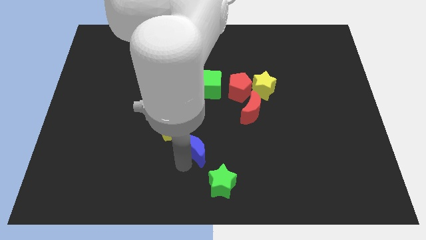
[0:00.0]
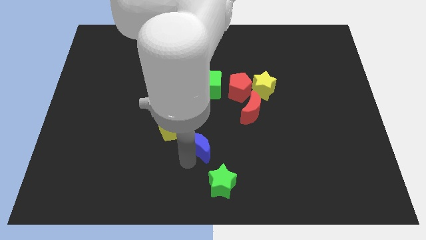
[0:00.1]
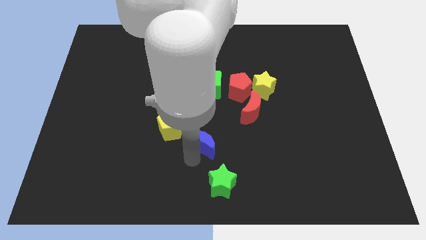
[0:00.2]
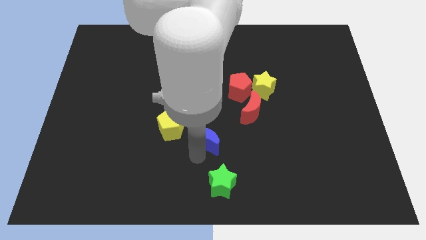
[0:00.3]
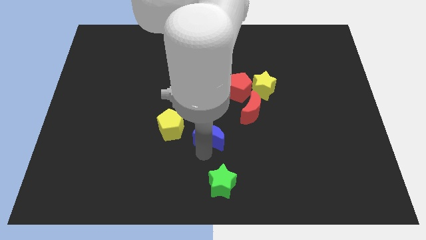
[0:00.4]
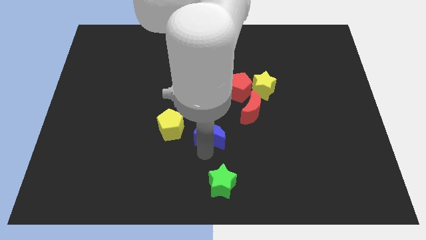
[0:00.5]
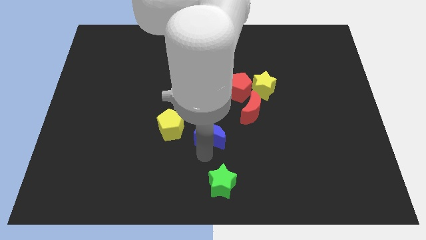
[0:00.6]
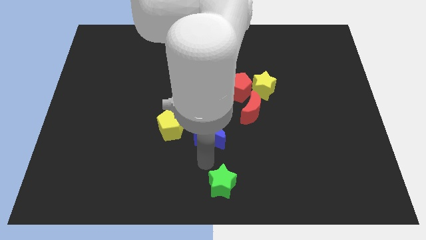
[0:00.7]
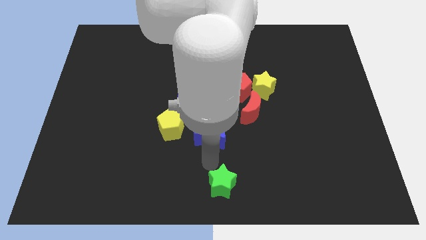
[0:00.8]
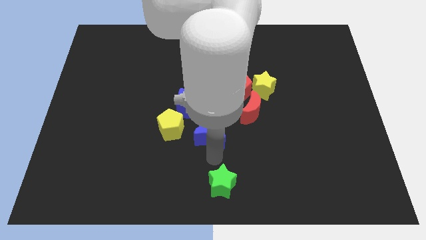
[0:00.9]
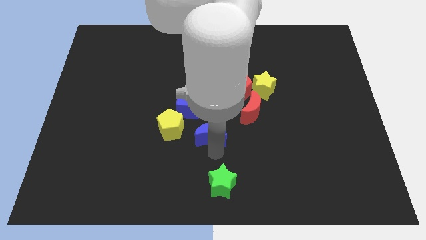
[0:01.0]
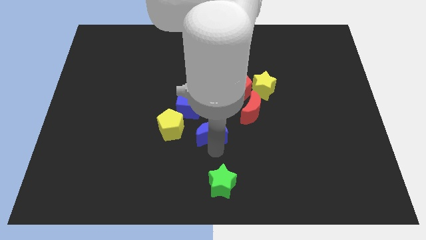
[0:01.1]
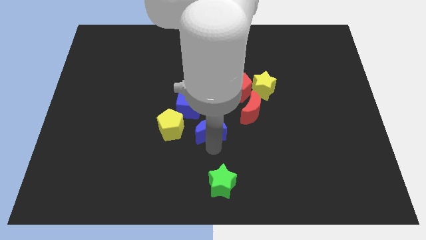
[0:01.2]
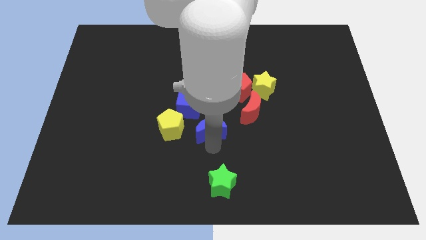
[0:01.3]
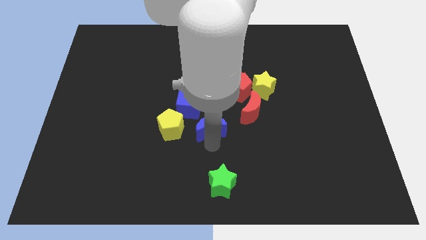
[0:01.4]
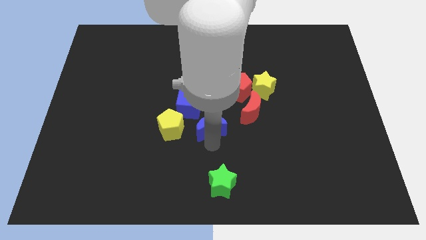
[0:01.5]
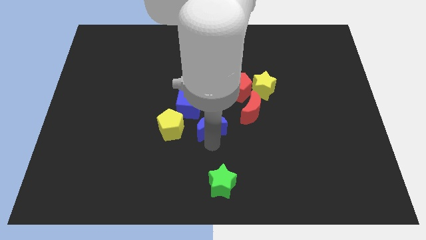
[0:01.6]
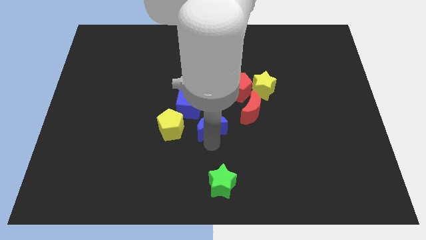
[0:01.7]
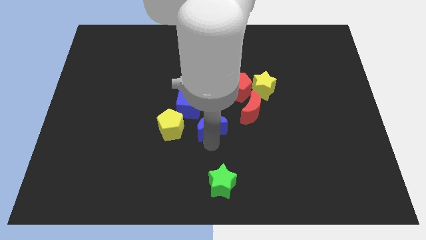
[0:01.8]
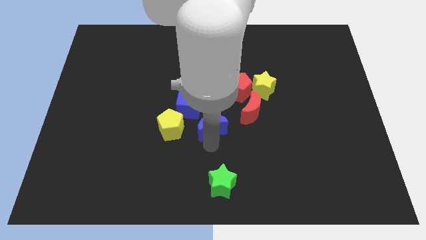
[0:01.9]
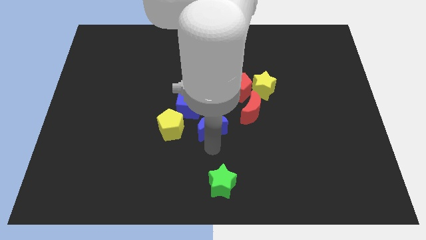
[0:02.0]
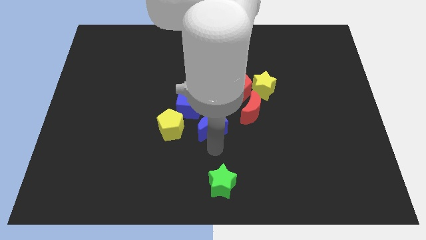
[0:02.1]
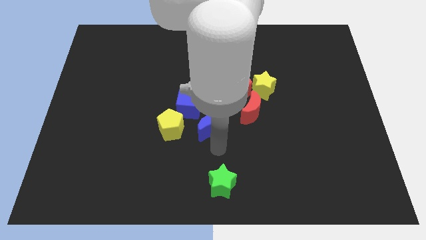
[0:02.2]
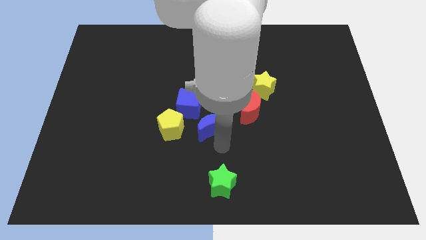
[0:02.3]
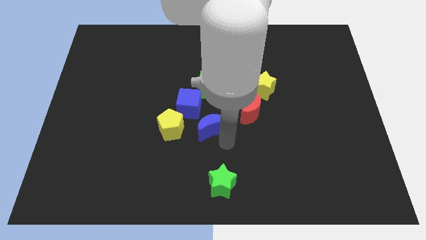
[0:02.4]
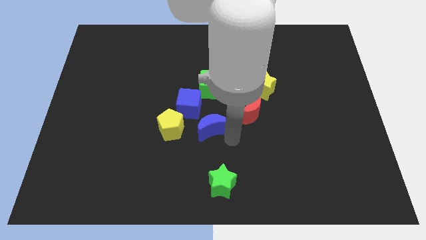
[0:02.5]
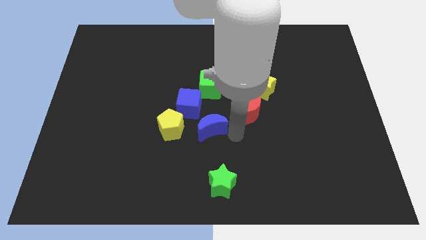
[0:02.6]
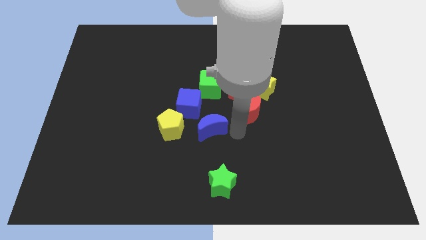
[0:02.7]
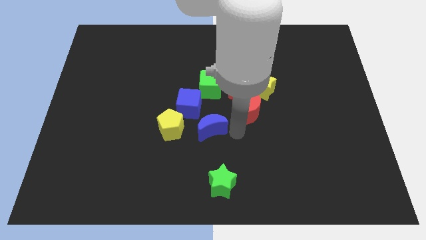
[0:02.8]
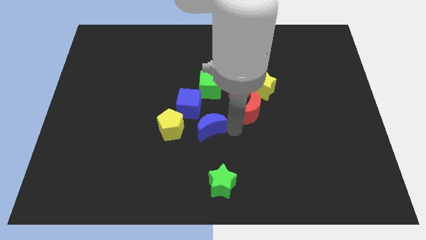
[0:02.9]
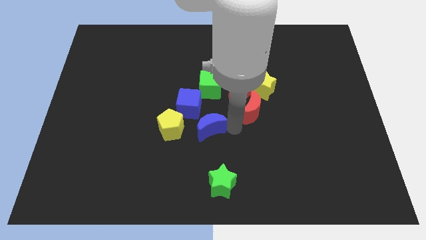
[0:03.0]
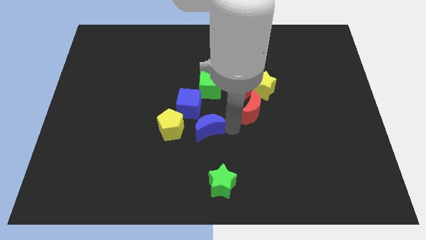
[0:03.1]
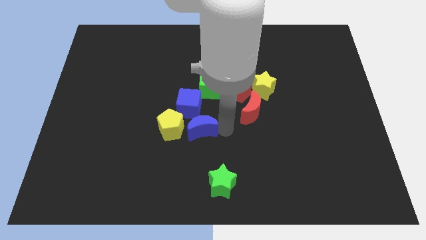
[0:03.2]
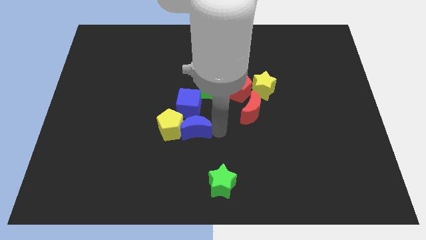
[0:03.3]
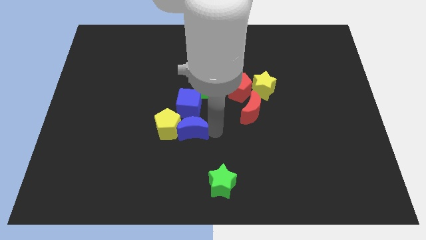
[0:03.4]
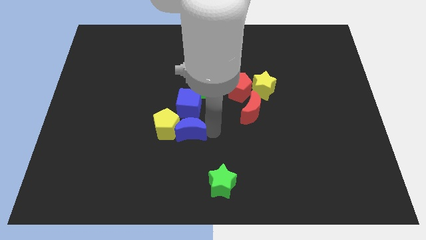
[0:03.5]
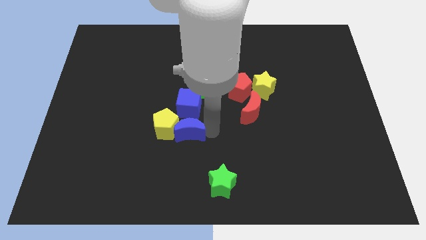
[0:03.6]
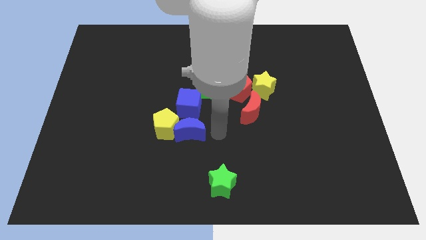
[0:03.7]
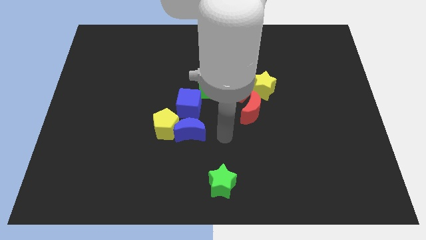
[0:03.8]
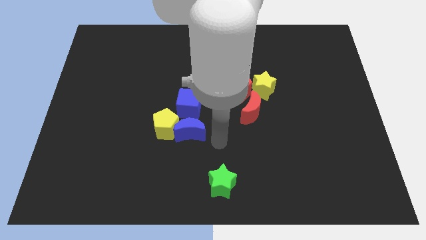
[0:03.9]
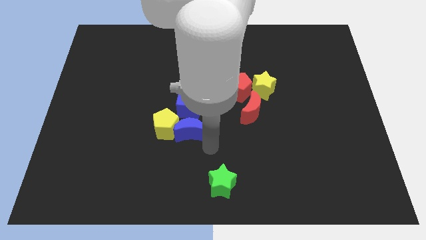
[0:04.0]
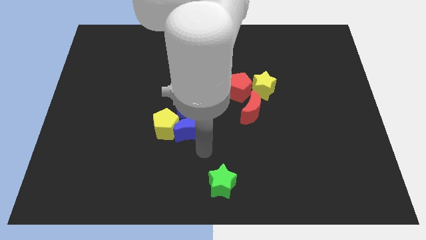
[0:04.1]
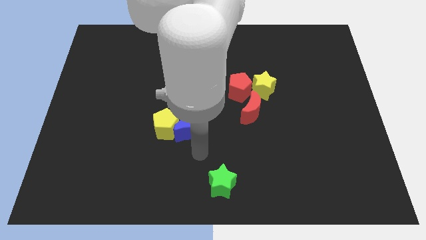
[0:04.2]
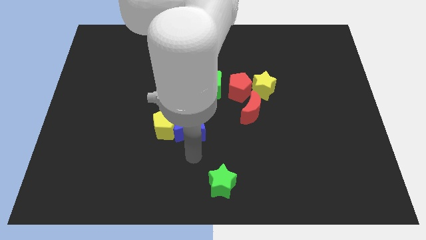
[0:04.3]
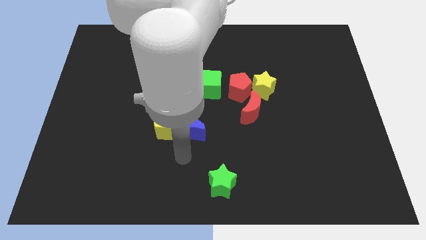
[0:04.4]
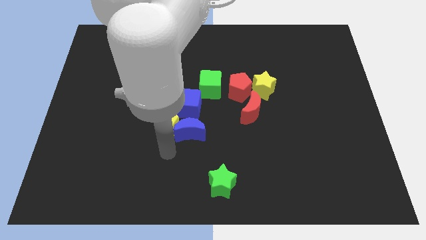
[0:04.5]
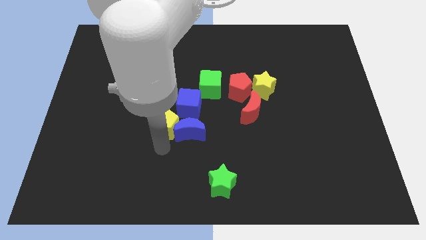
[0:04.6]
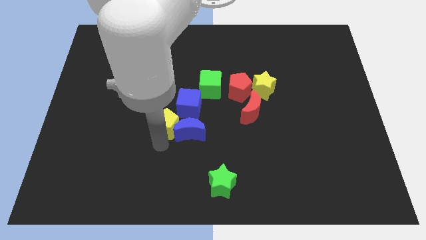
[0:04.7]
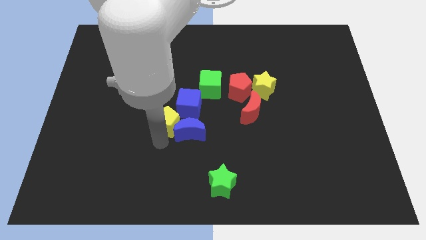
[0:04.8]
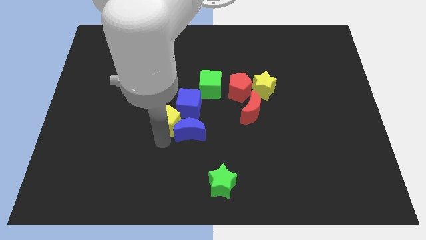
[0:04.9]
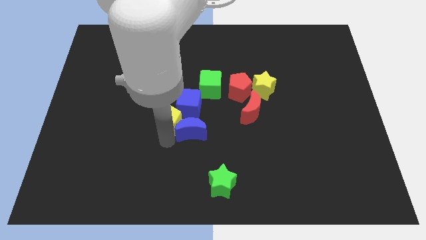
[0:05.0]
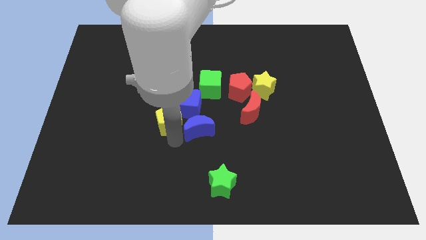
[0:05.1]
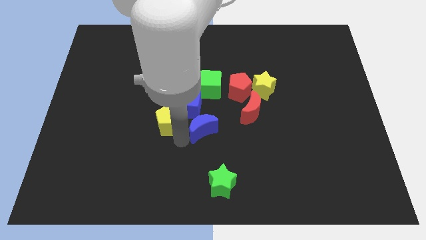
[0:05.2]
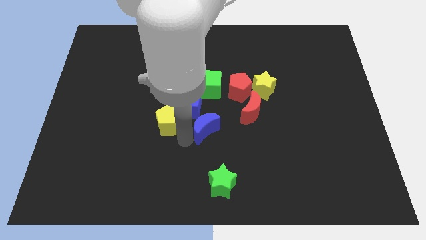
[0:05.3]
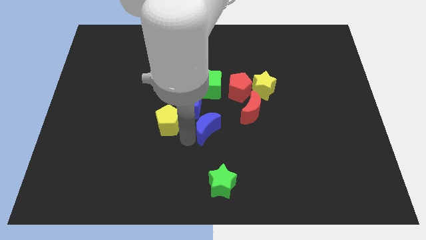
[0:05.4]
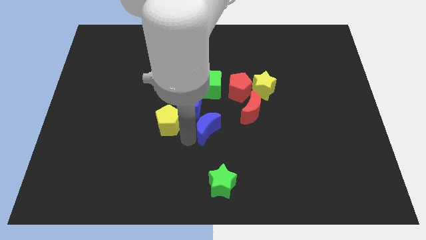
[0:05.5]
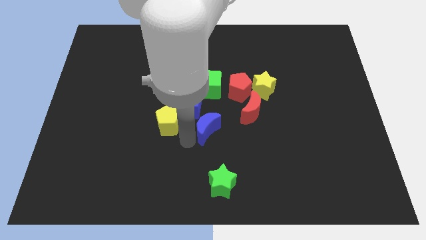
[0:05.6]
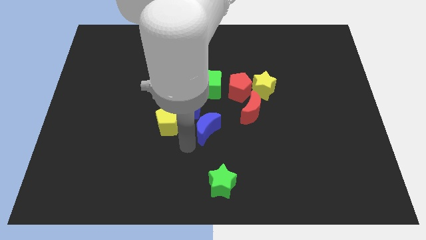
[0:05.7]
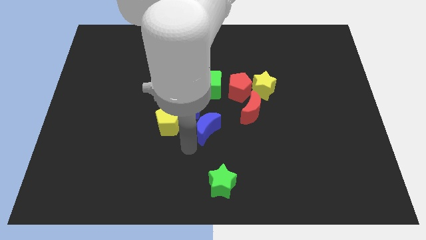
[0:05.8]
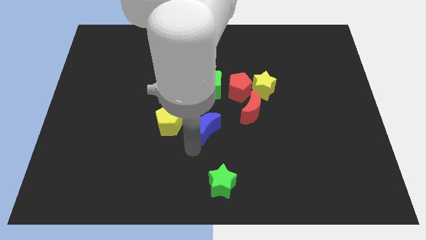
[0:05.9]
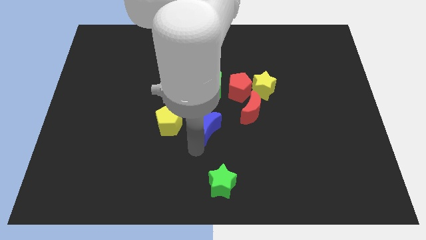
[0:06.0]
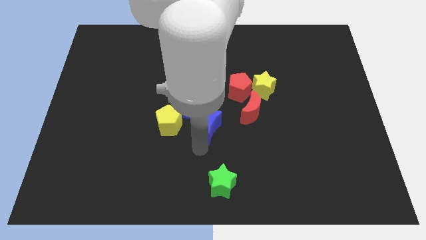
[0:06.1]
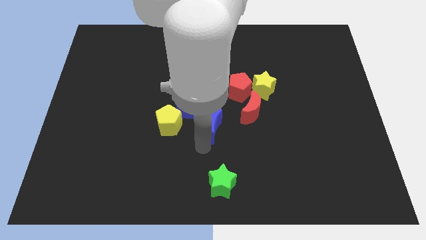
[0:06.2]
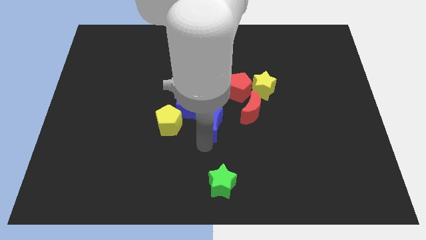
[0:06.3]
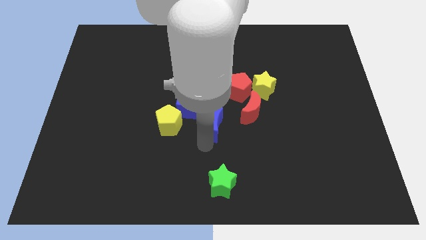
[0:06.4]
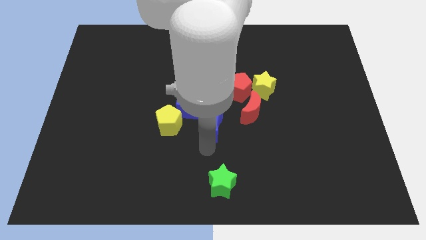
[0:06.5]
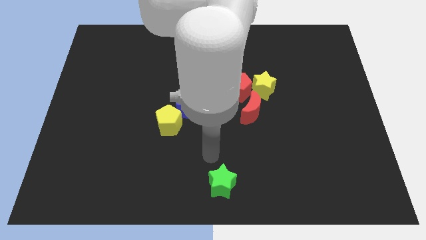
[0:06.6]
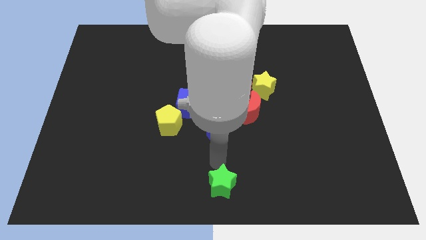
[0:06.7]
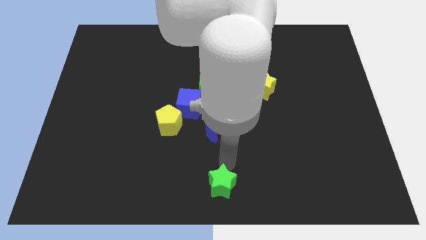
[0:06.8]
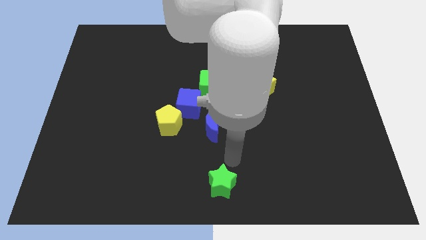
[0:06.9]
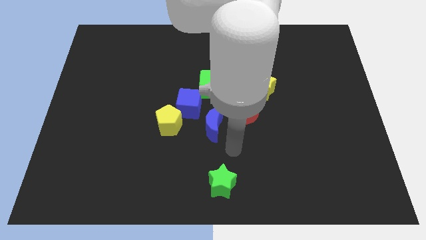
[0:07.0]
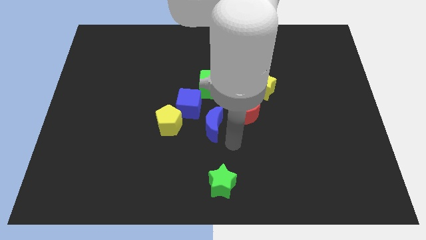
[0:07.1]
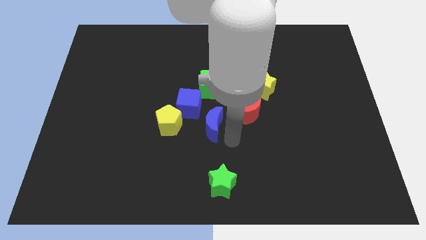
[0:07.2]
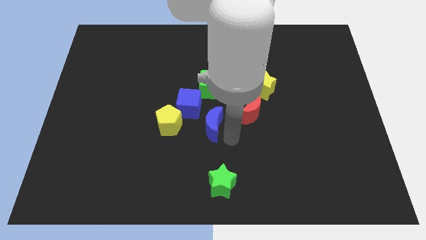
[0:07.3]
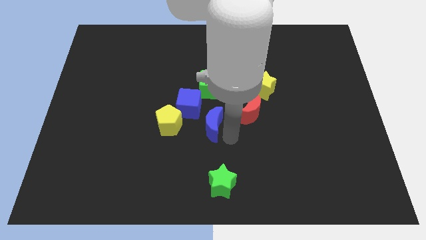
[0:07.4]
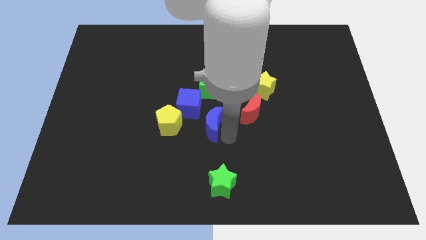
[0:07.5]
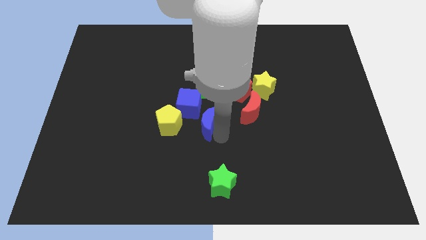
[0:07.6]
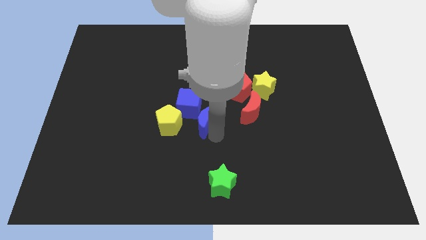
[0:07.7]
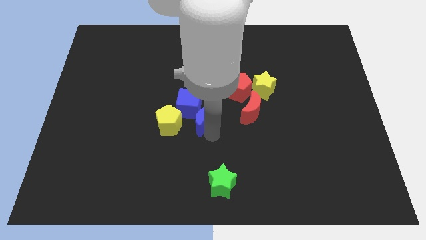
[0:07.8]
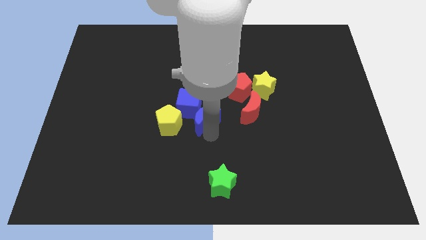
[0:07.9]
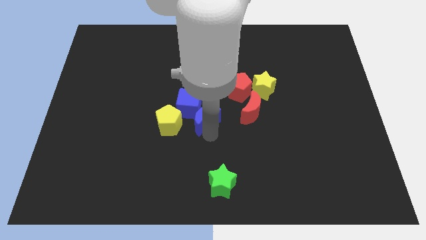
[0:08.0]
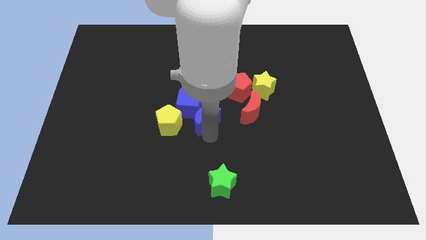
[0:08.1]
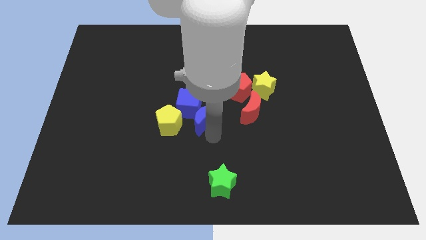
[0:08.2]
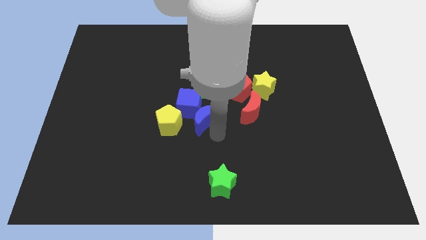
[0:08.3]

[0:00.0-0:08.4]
place the blue crescent to the right of the blue cube

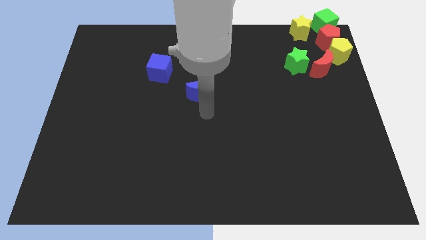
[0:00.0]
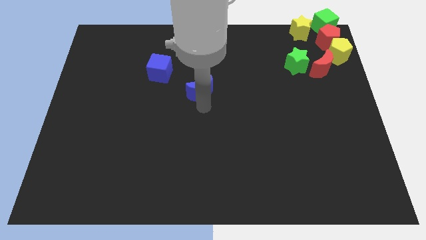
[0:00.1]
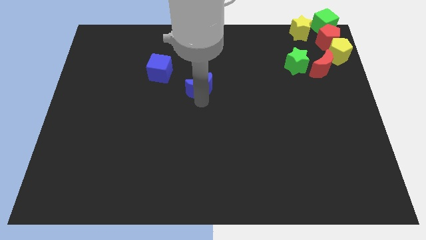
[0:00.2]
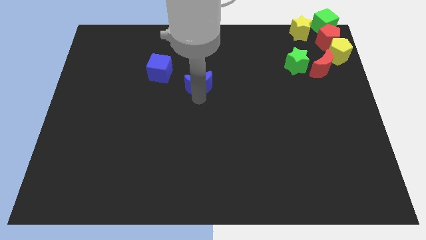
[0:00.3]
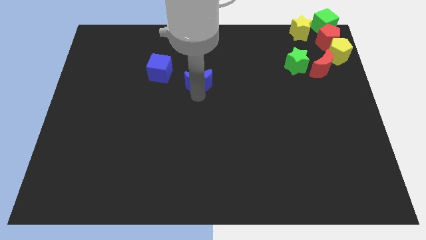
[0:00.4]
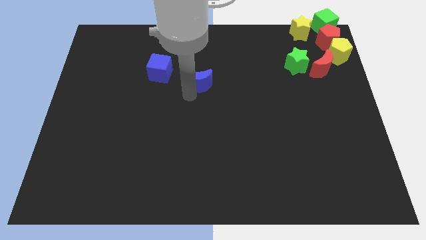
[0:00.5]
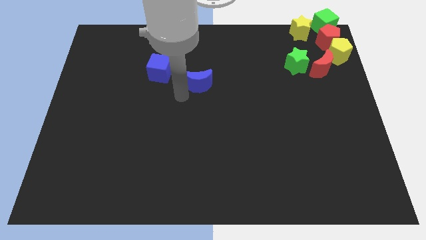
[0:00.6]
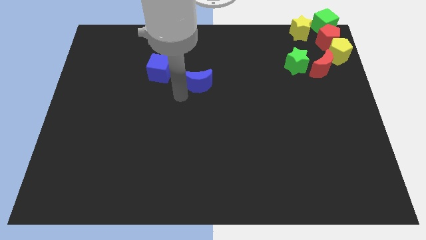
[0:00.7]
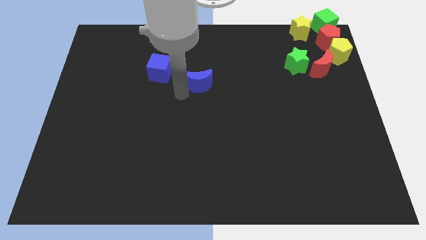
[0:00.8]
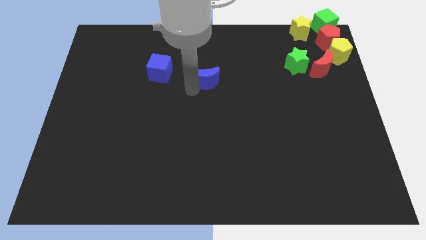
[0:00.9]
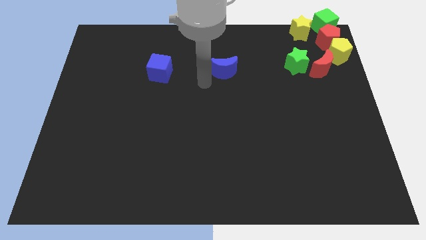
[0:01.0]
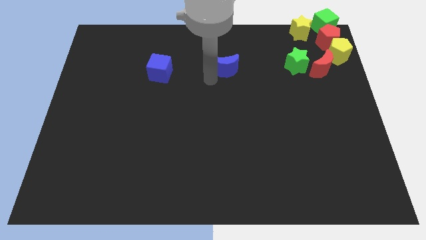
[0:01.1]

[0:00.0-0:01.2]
place blue moon right to the blue cube
